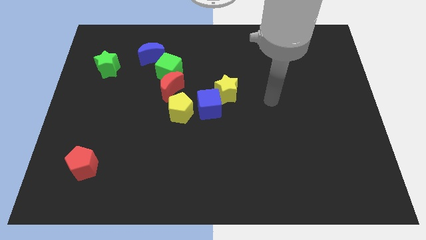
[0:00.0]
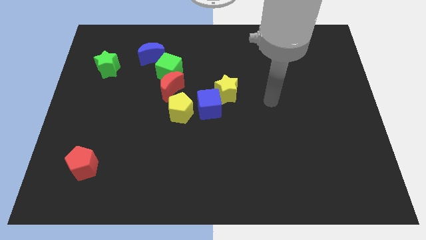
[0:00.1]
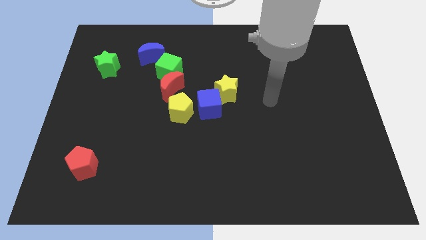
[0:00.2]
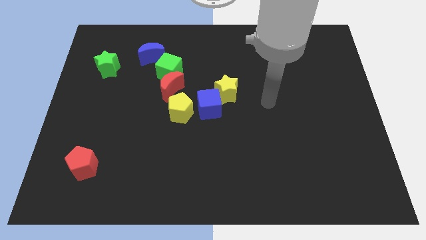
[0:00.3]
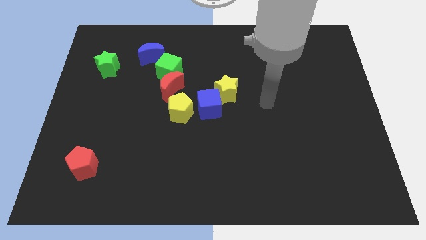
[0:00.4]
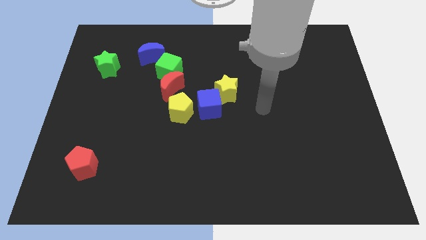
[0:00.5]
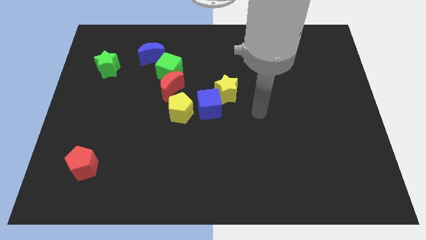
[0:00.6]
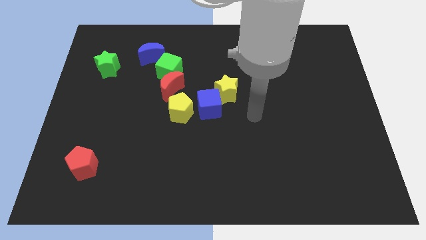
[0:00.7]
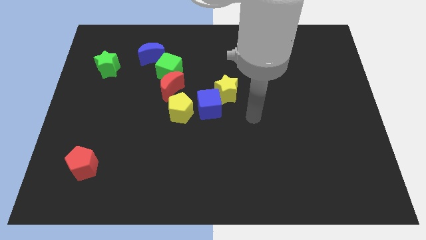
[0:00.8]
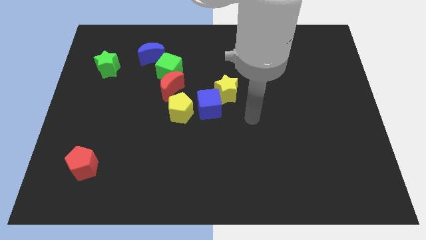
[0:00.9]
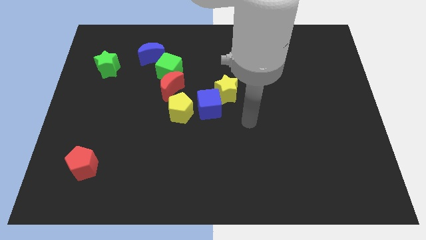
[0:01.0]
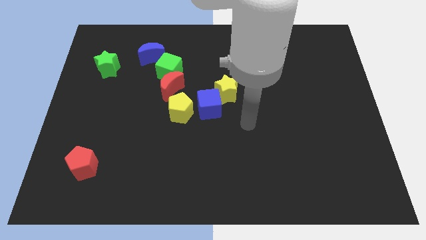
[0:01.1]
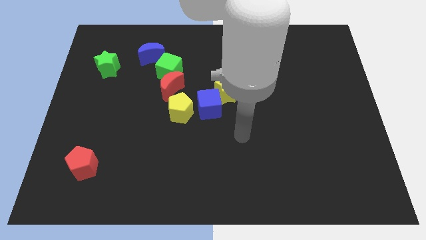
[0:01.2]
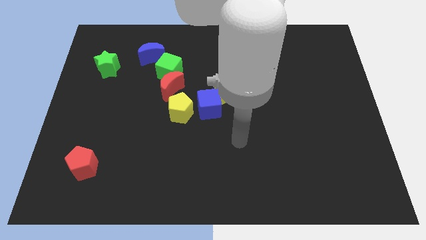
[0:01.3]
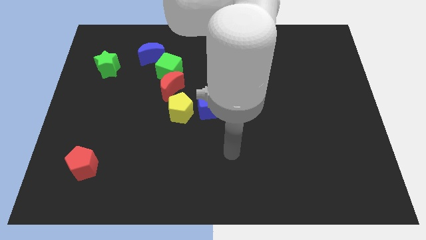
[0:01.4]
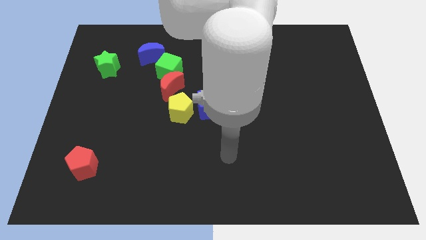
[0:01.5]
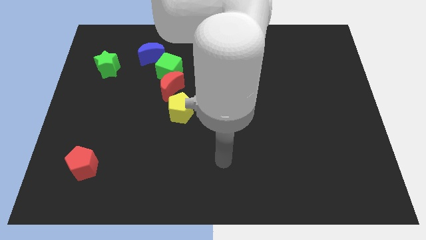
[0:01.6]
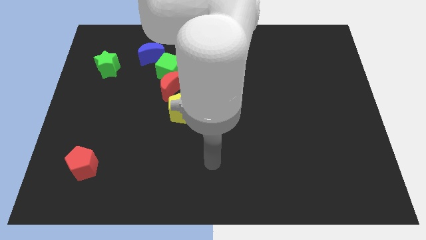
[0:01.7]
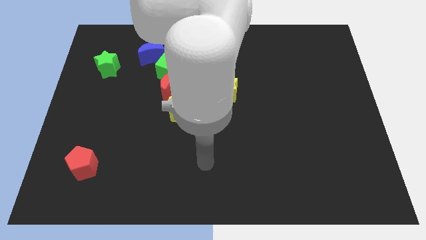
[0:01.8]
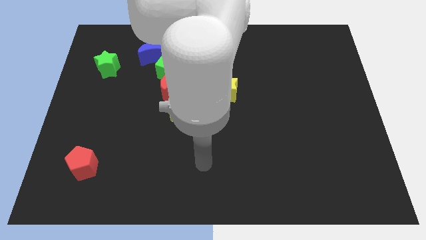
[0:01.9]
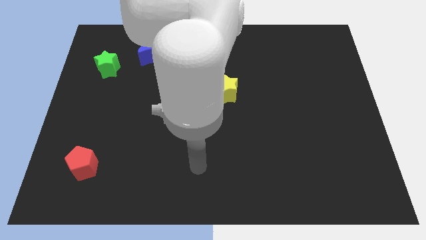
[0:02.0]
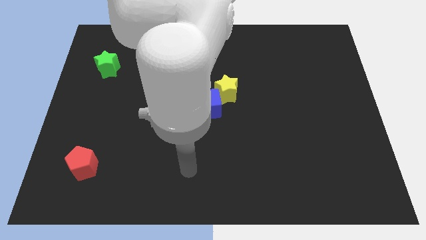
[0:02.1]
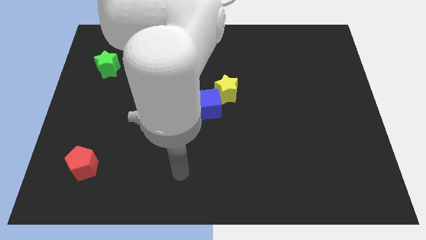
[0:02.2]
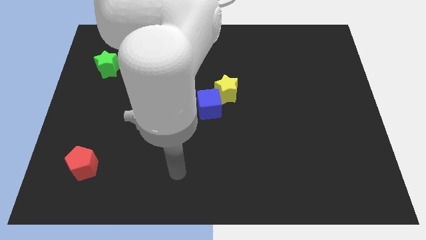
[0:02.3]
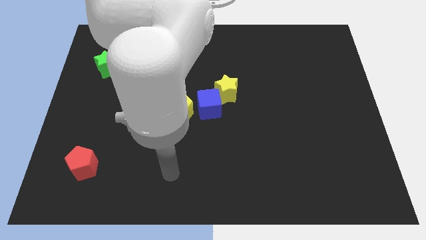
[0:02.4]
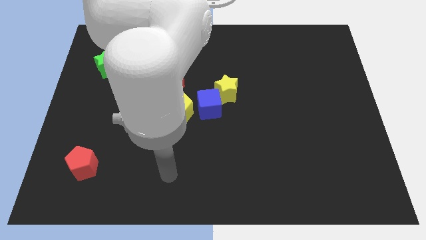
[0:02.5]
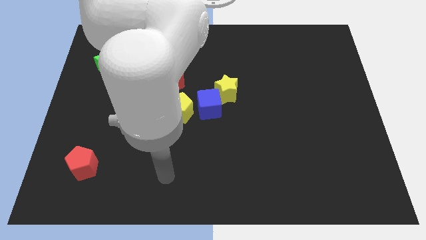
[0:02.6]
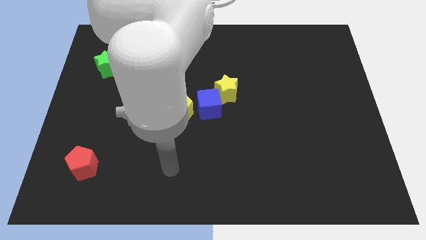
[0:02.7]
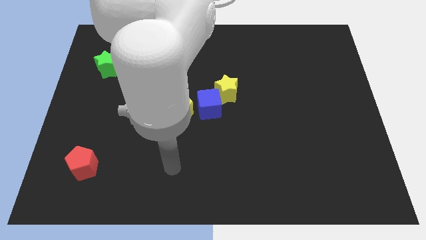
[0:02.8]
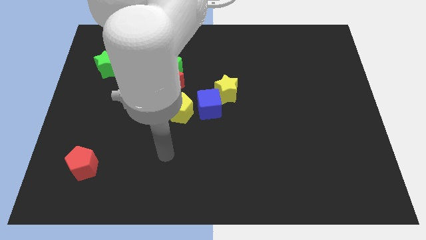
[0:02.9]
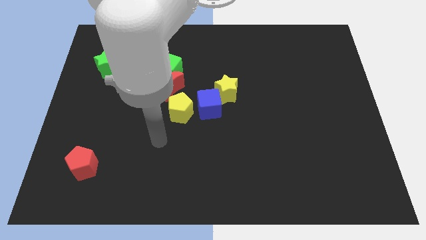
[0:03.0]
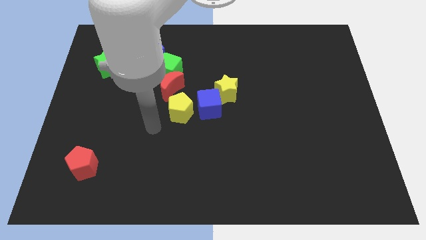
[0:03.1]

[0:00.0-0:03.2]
place your arm vertically below the yellow pentagon

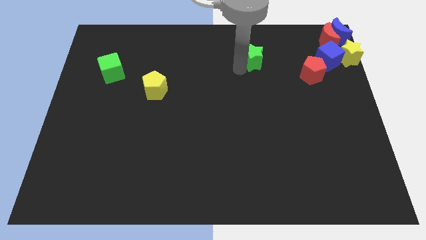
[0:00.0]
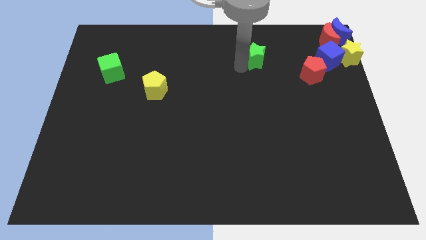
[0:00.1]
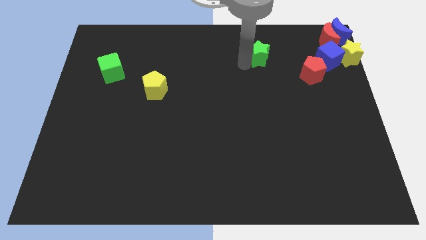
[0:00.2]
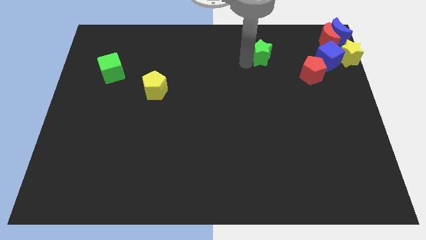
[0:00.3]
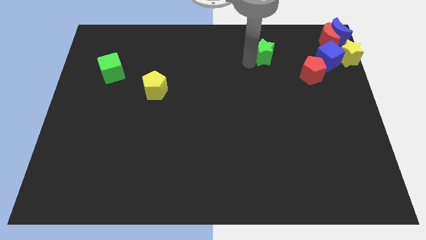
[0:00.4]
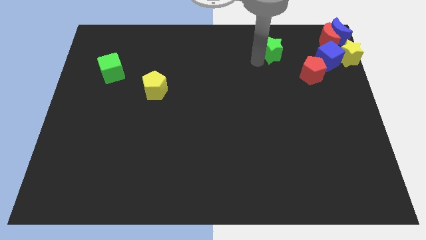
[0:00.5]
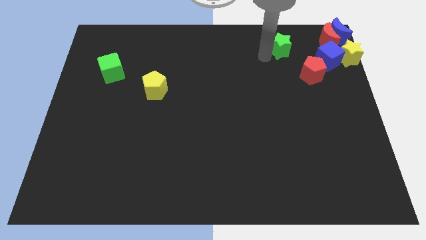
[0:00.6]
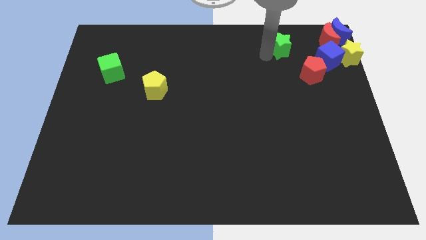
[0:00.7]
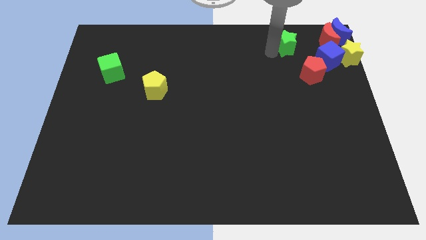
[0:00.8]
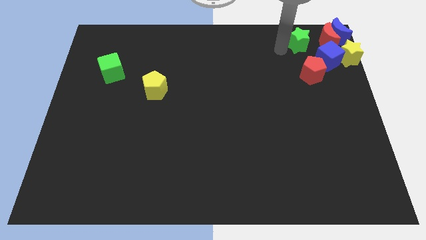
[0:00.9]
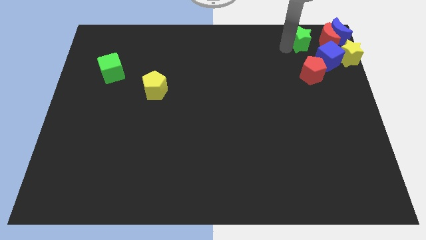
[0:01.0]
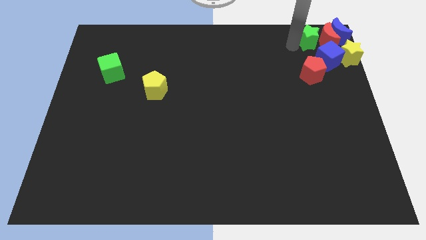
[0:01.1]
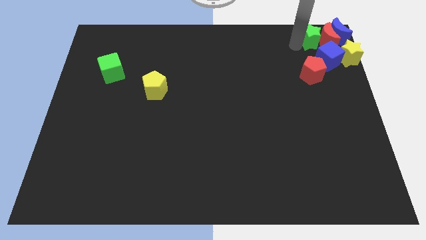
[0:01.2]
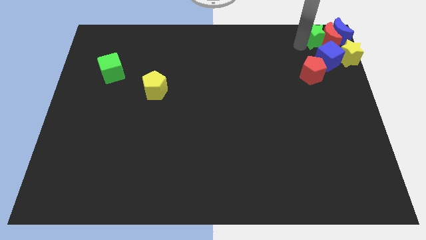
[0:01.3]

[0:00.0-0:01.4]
move the green star into the left side of the red crescent

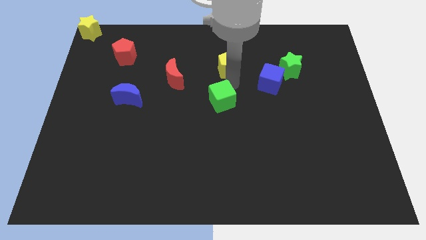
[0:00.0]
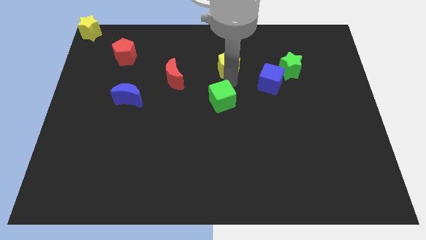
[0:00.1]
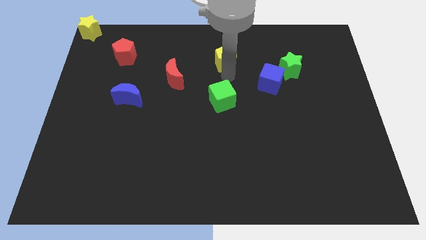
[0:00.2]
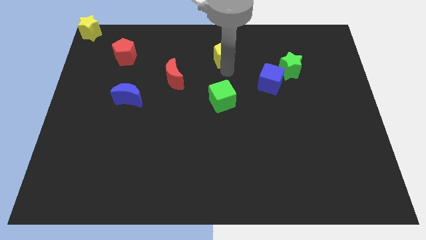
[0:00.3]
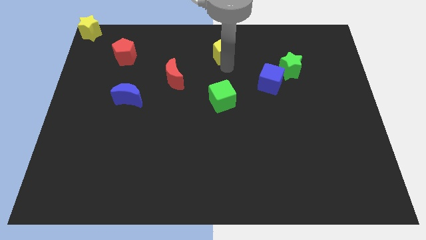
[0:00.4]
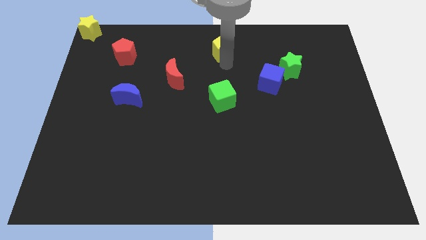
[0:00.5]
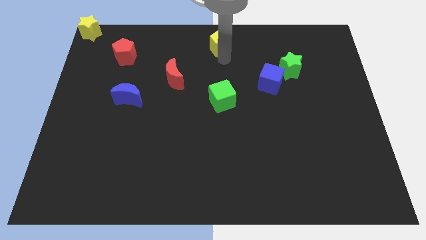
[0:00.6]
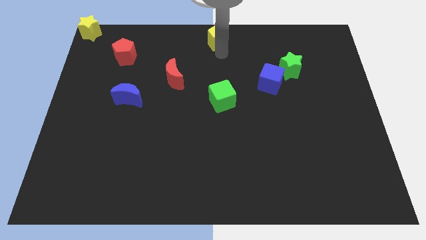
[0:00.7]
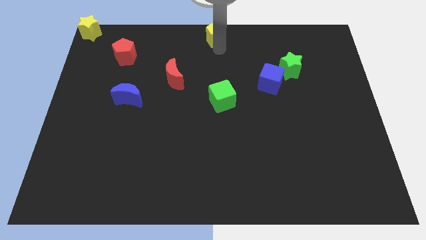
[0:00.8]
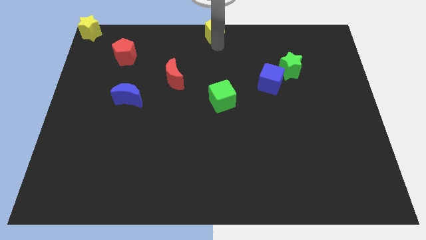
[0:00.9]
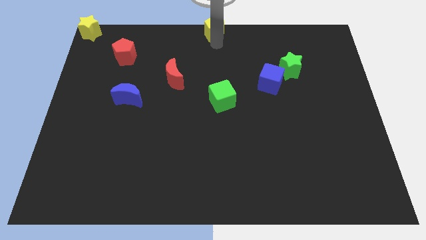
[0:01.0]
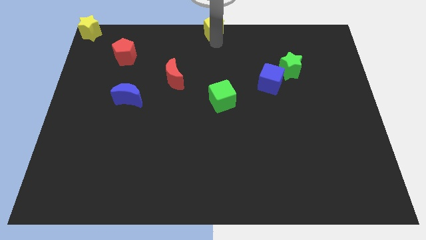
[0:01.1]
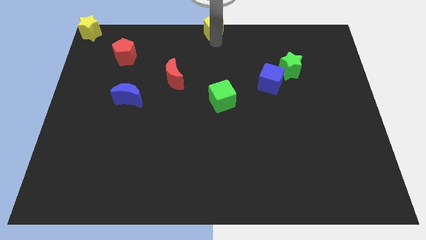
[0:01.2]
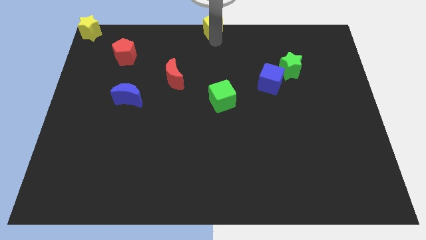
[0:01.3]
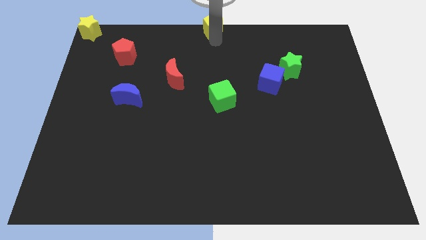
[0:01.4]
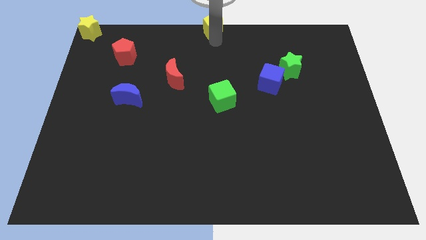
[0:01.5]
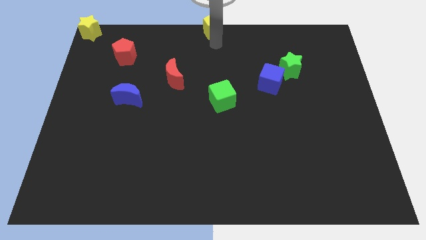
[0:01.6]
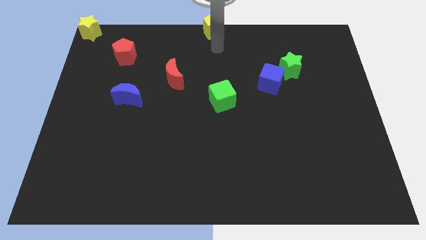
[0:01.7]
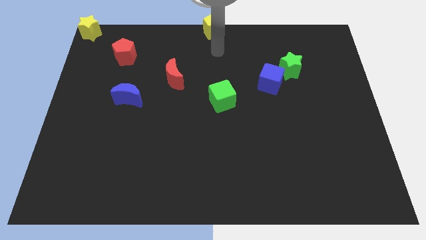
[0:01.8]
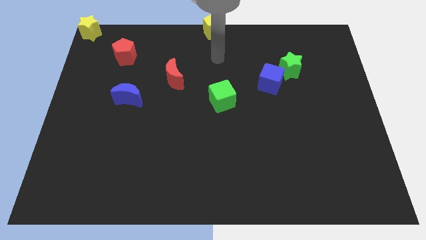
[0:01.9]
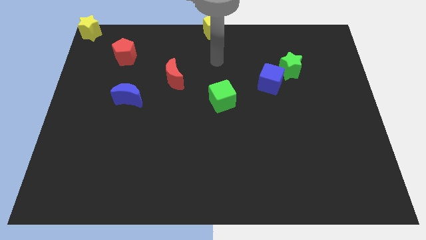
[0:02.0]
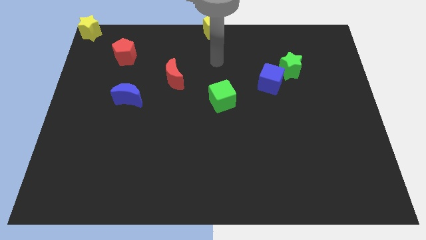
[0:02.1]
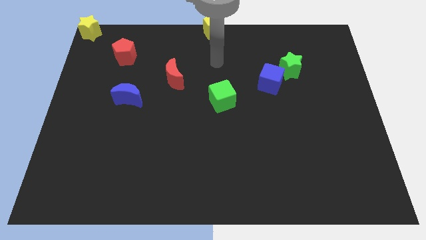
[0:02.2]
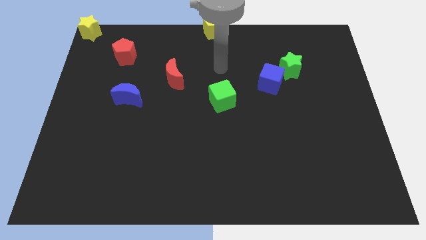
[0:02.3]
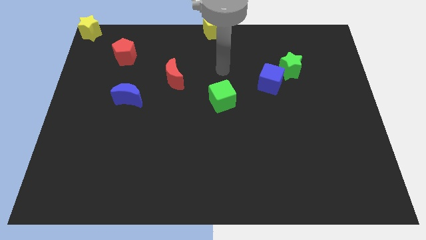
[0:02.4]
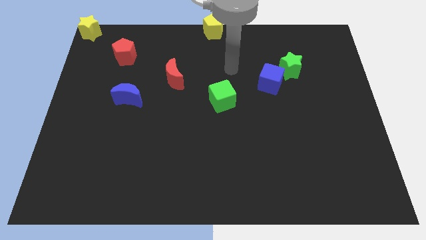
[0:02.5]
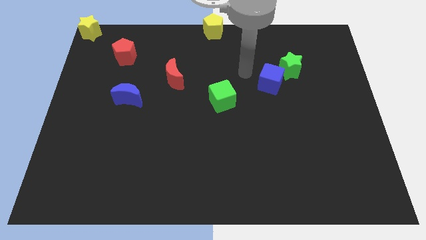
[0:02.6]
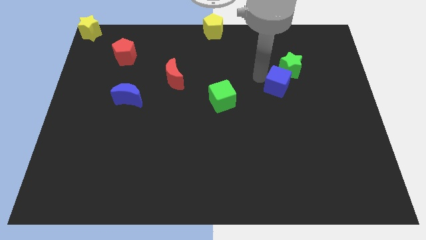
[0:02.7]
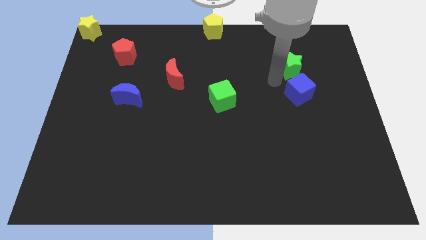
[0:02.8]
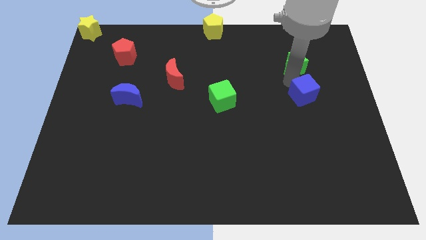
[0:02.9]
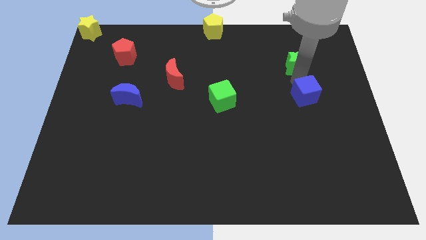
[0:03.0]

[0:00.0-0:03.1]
place blue cube below green star

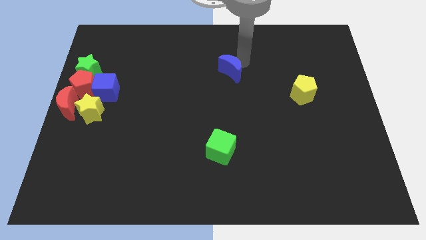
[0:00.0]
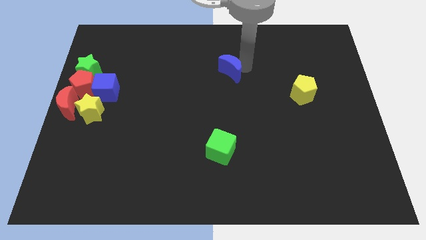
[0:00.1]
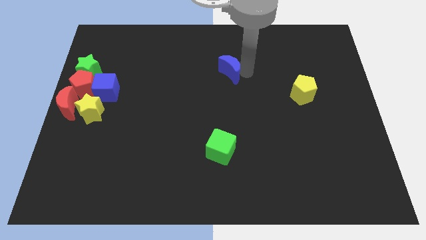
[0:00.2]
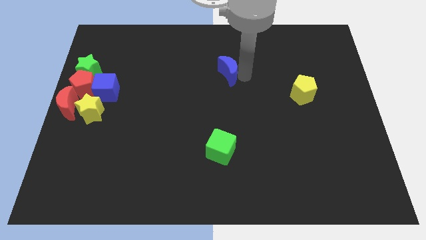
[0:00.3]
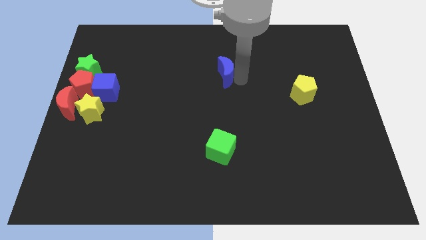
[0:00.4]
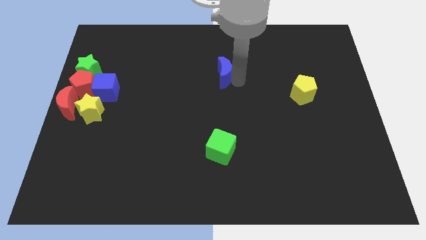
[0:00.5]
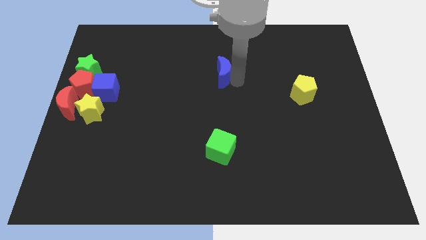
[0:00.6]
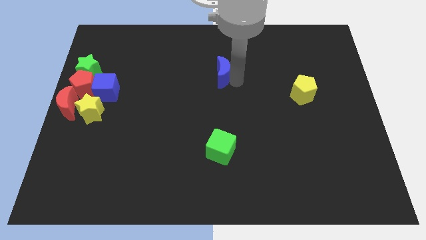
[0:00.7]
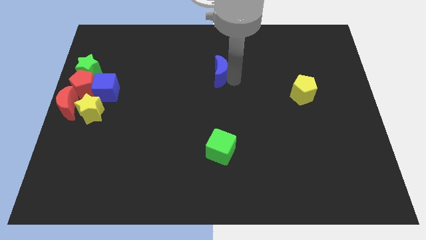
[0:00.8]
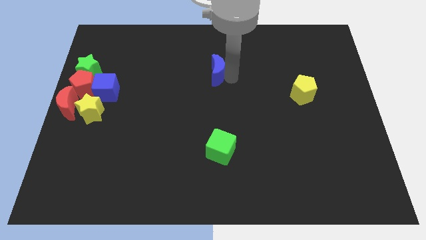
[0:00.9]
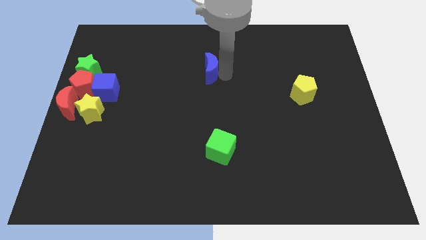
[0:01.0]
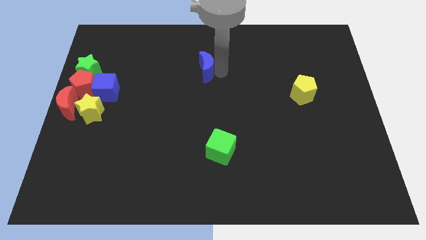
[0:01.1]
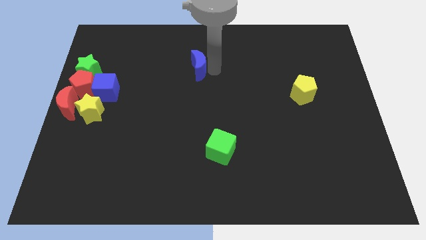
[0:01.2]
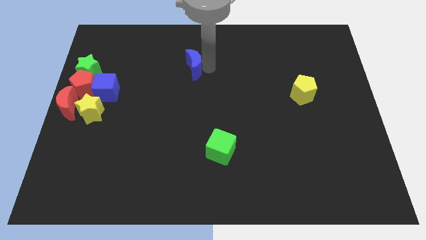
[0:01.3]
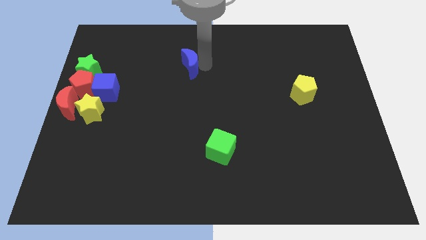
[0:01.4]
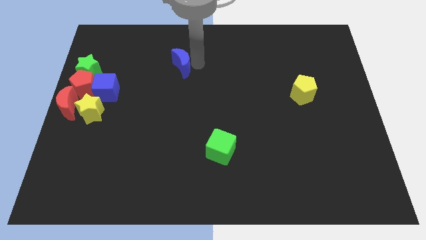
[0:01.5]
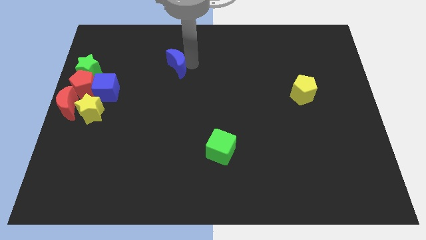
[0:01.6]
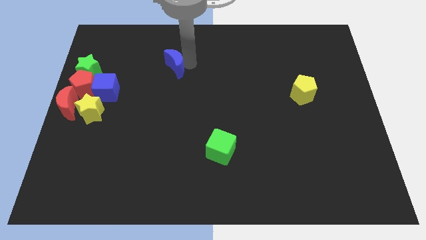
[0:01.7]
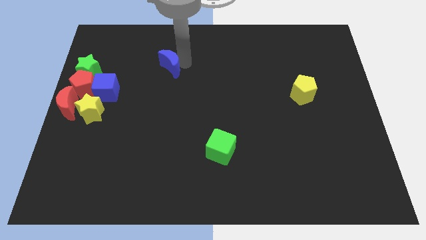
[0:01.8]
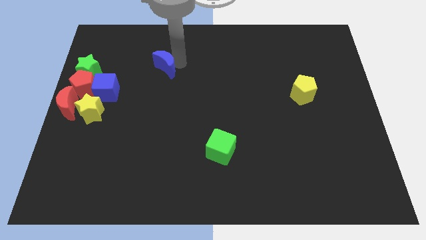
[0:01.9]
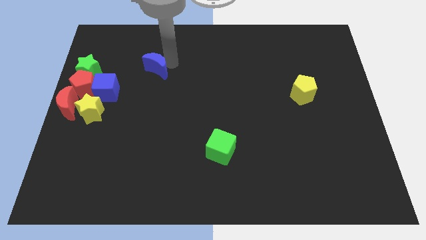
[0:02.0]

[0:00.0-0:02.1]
drag the blue moon towards the blue cube
